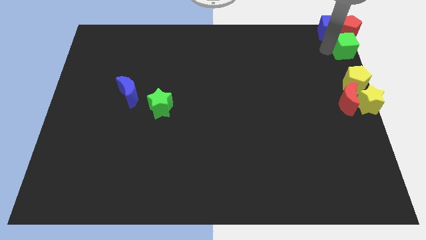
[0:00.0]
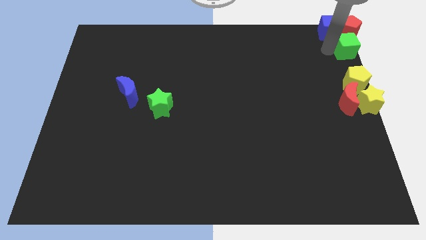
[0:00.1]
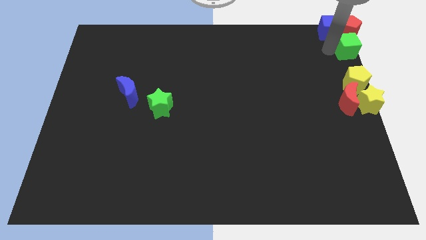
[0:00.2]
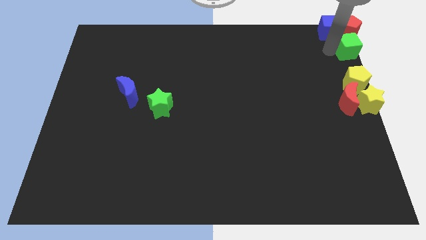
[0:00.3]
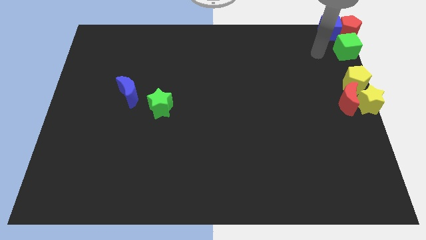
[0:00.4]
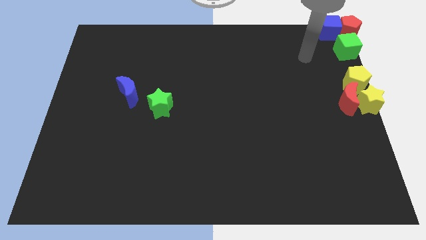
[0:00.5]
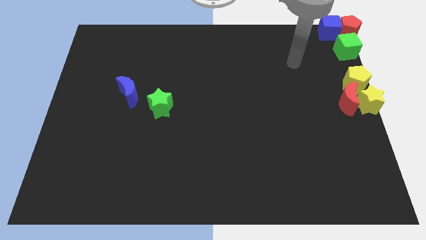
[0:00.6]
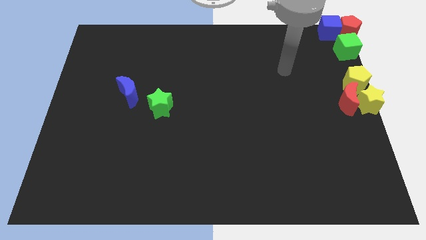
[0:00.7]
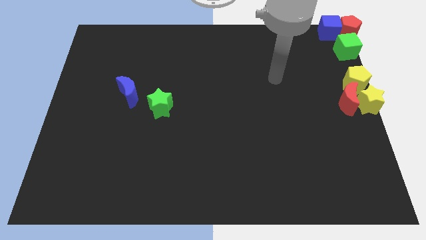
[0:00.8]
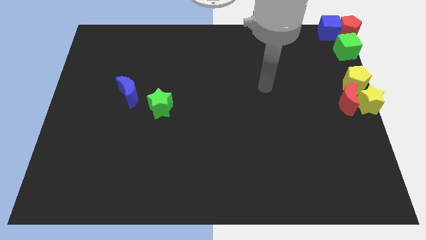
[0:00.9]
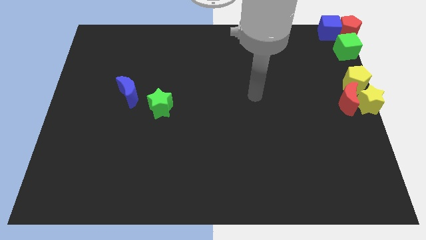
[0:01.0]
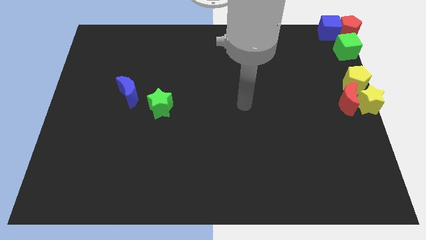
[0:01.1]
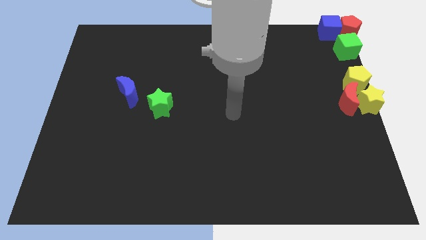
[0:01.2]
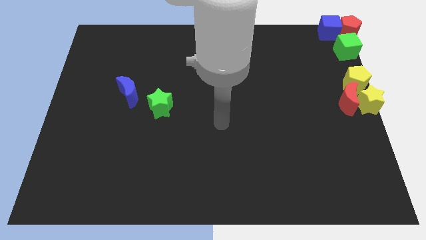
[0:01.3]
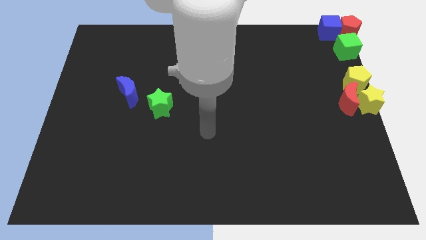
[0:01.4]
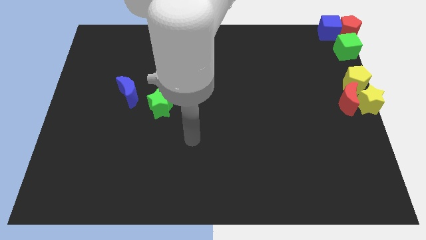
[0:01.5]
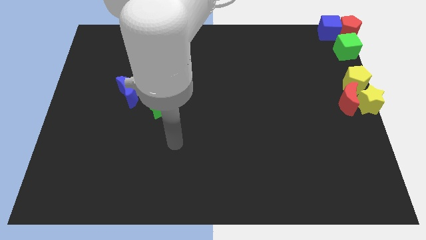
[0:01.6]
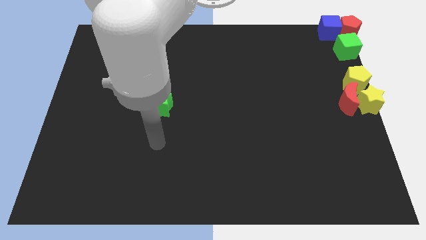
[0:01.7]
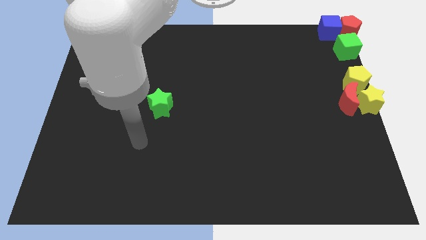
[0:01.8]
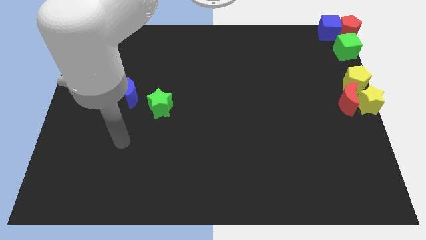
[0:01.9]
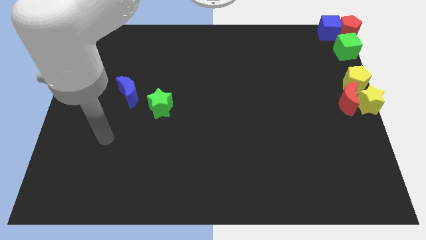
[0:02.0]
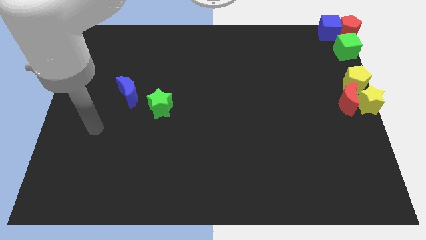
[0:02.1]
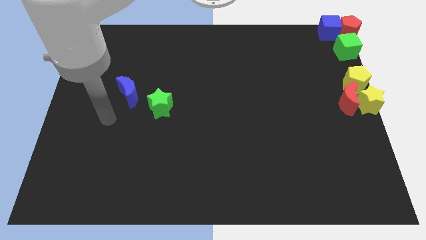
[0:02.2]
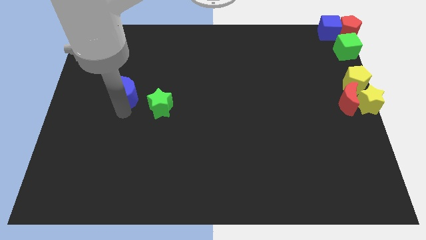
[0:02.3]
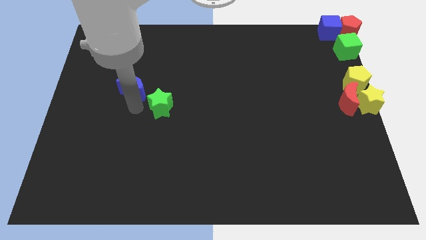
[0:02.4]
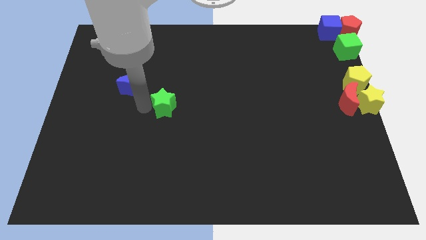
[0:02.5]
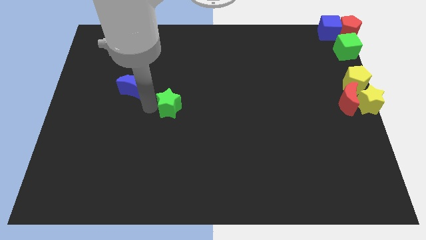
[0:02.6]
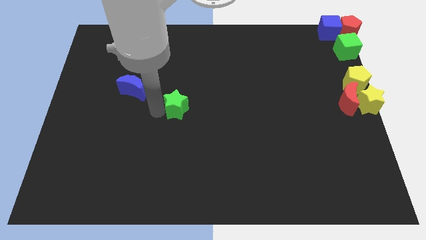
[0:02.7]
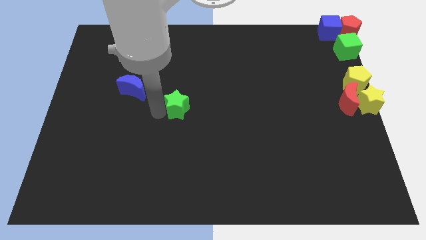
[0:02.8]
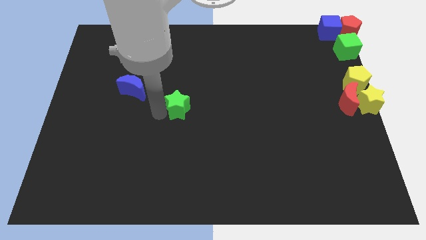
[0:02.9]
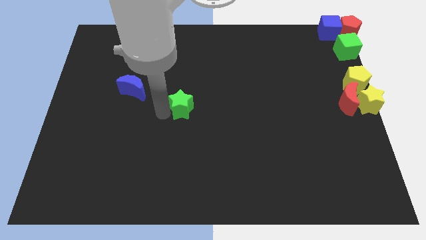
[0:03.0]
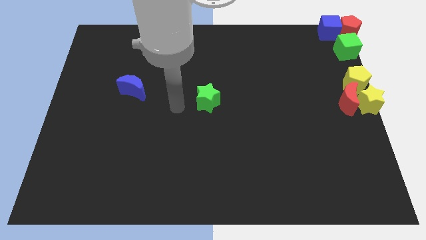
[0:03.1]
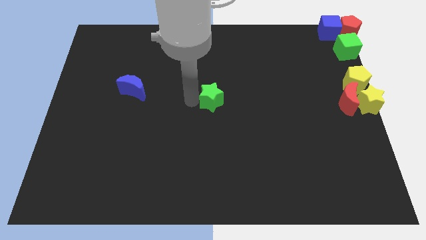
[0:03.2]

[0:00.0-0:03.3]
push the green star to the center of the board

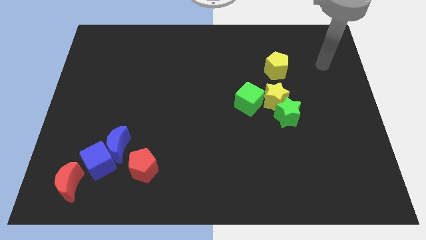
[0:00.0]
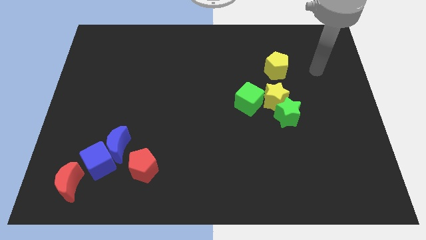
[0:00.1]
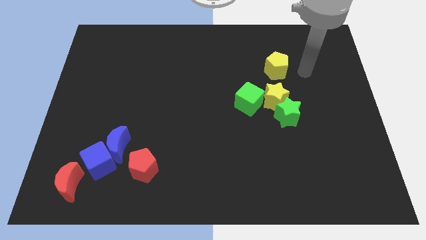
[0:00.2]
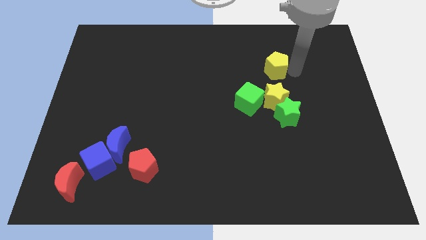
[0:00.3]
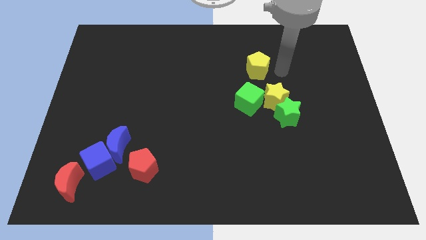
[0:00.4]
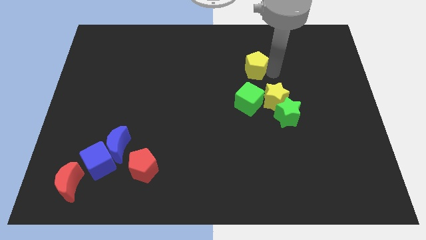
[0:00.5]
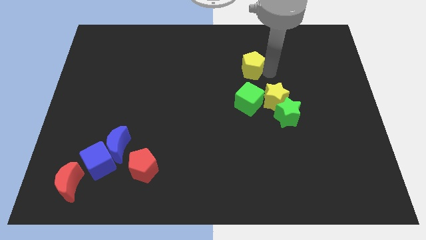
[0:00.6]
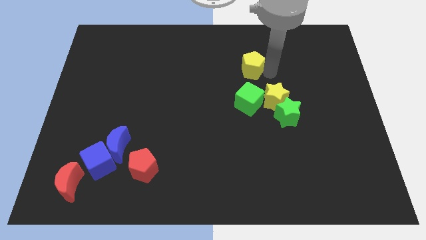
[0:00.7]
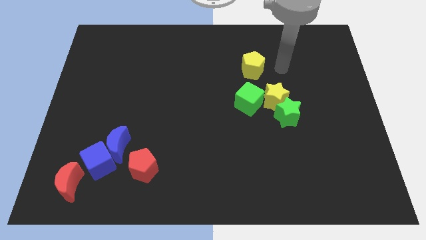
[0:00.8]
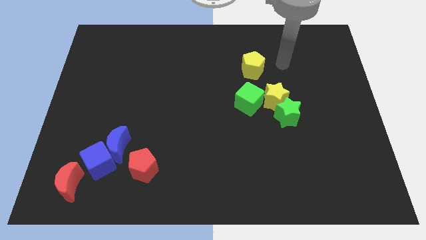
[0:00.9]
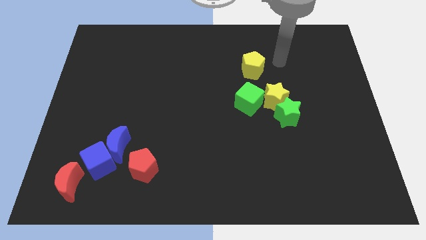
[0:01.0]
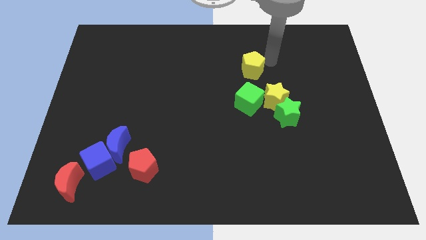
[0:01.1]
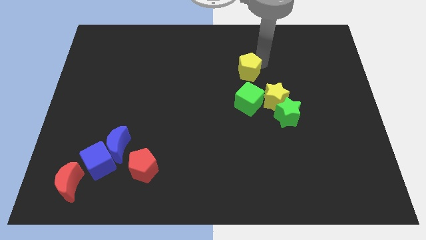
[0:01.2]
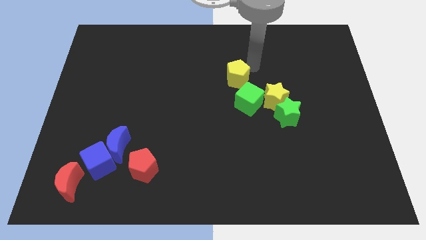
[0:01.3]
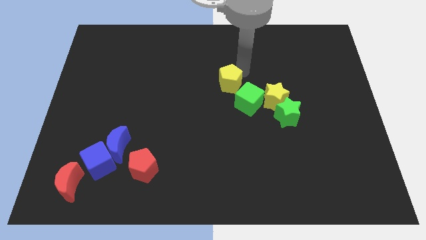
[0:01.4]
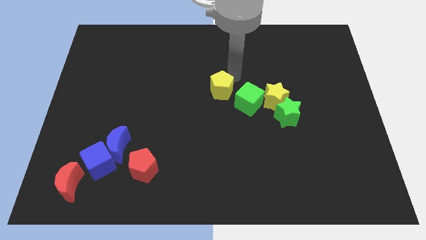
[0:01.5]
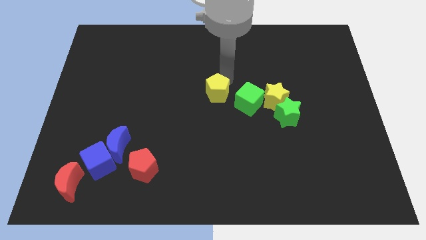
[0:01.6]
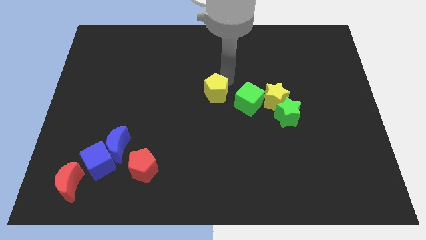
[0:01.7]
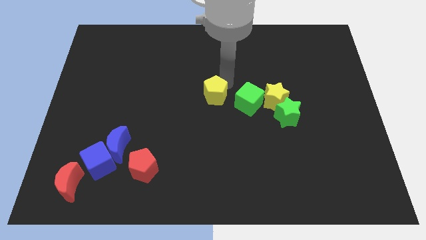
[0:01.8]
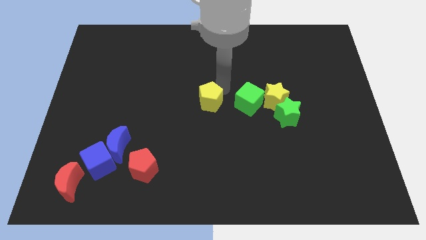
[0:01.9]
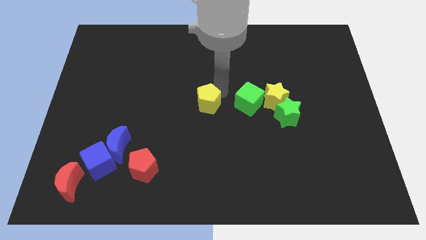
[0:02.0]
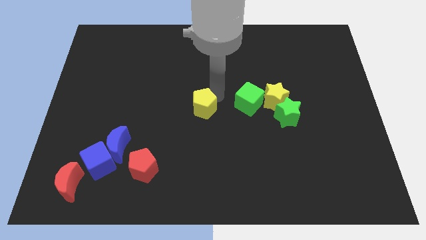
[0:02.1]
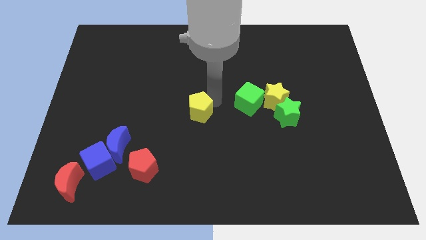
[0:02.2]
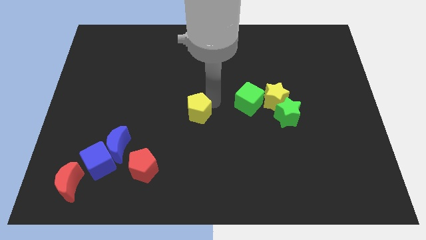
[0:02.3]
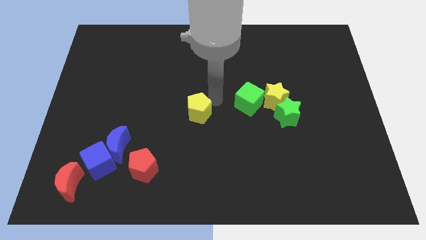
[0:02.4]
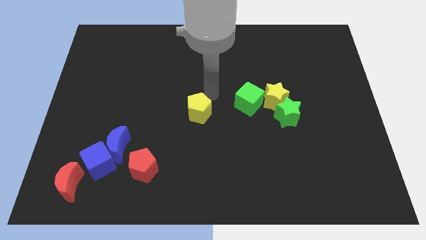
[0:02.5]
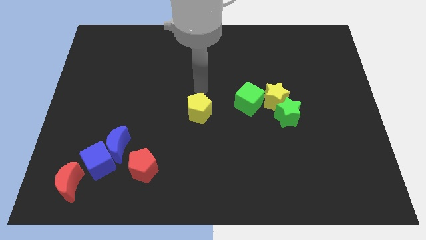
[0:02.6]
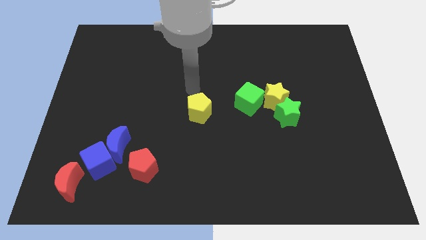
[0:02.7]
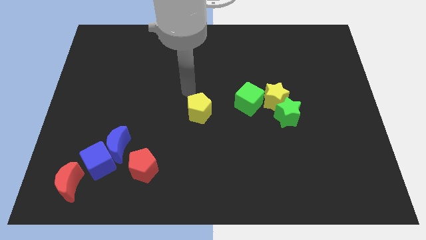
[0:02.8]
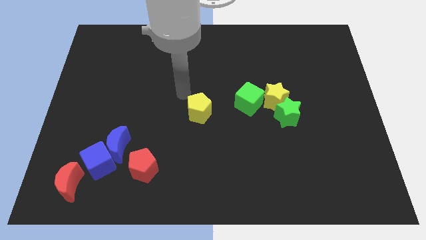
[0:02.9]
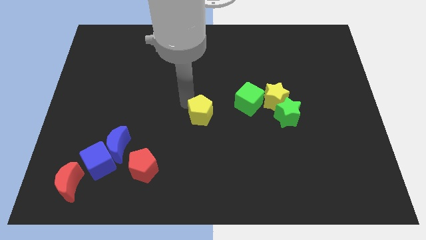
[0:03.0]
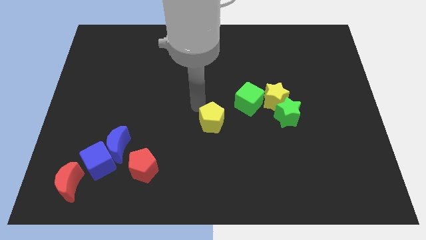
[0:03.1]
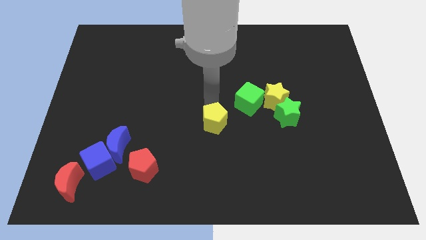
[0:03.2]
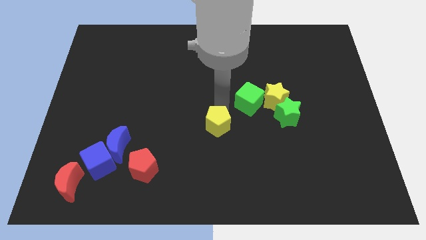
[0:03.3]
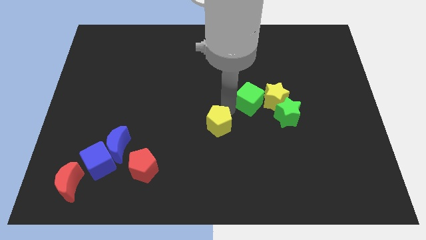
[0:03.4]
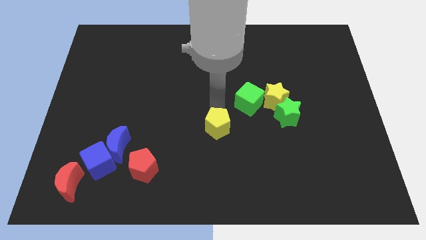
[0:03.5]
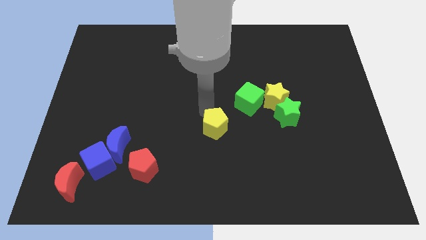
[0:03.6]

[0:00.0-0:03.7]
move the yellow pentagon between the green cube and red pentagon

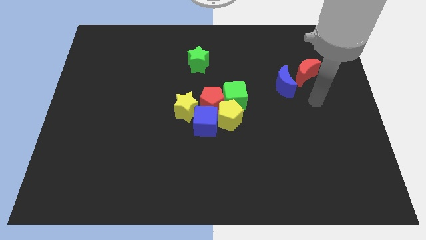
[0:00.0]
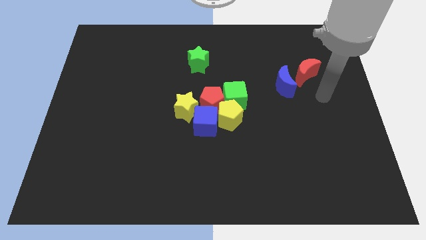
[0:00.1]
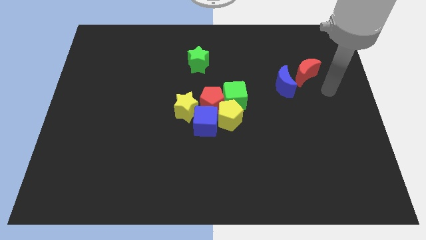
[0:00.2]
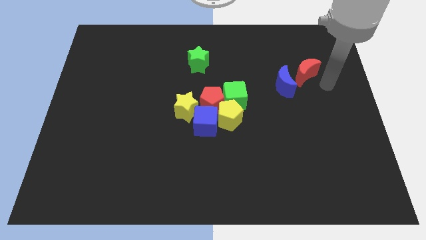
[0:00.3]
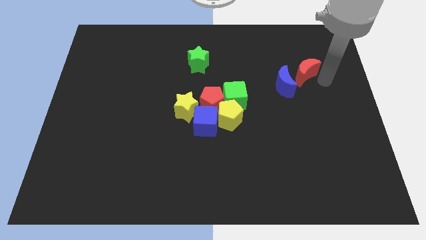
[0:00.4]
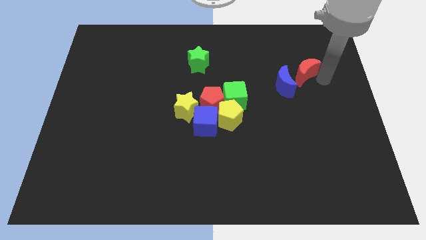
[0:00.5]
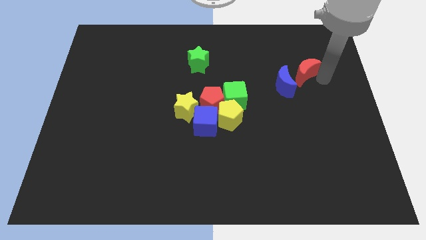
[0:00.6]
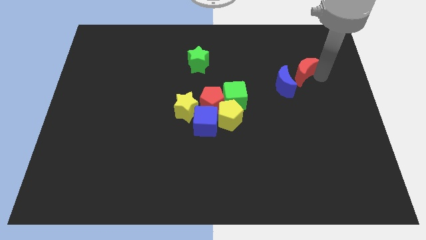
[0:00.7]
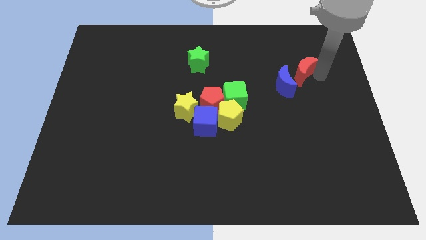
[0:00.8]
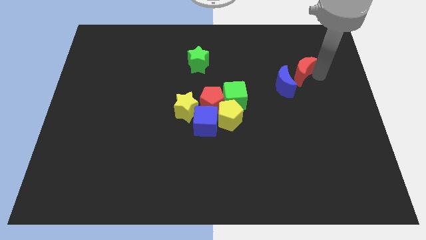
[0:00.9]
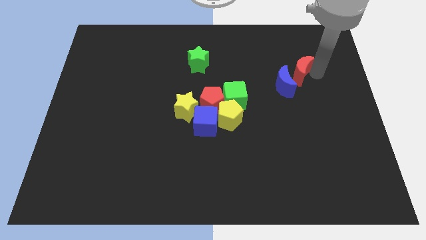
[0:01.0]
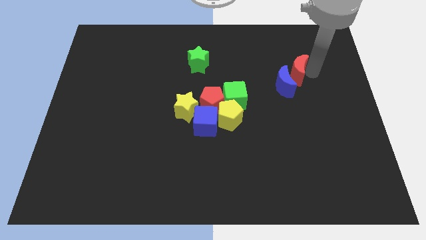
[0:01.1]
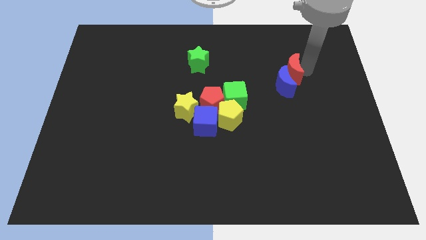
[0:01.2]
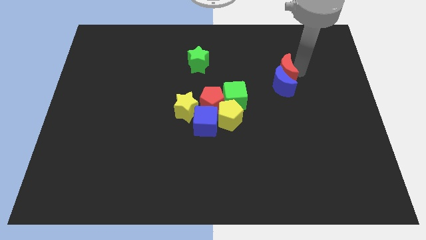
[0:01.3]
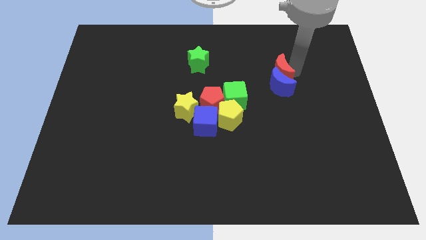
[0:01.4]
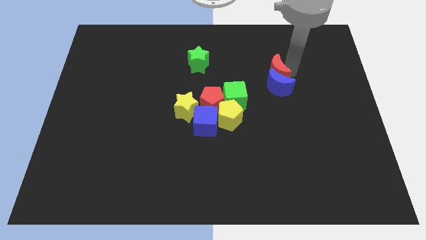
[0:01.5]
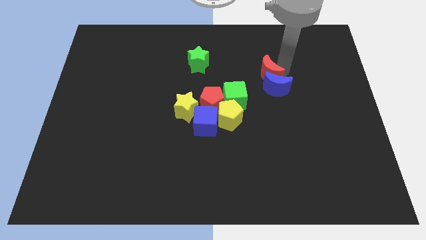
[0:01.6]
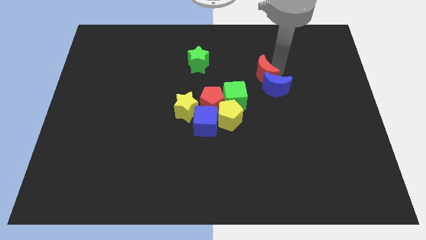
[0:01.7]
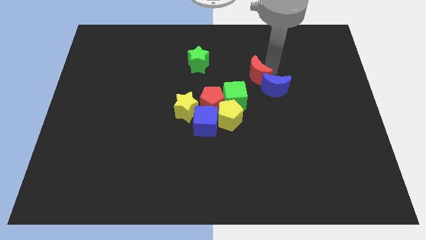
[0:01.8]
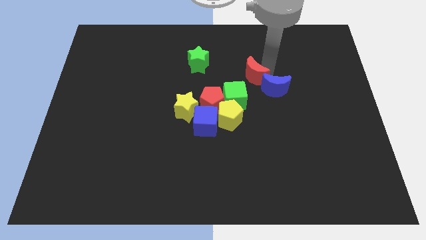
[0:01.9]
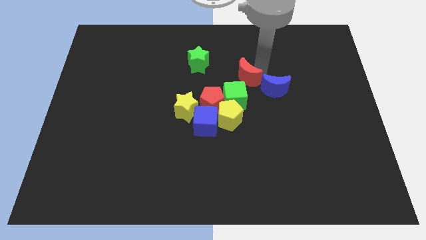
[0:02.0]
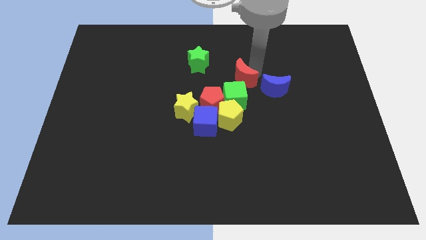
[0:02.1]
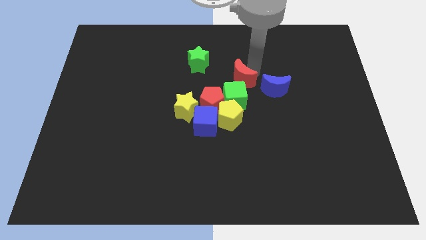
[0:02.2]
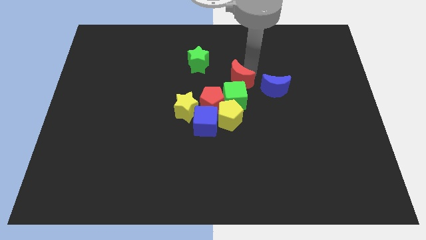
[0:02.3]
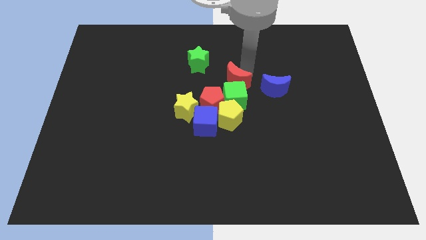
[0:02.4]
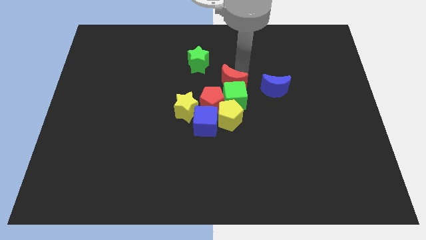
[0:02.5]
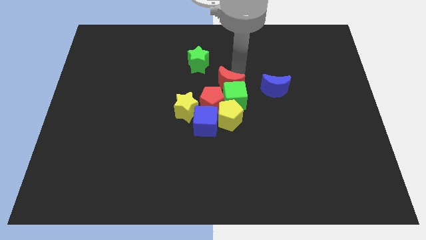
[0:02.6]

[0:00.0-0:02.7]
move the red crescent to the top of the green cube
